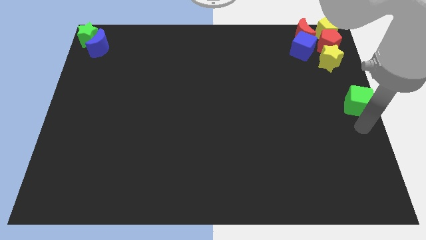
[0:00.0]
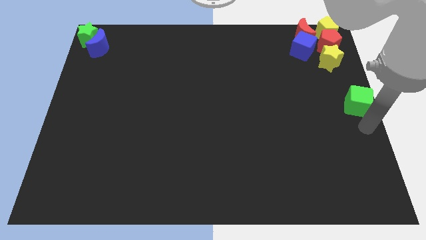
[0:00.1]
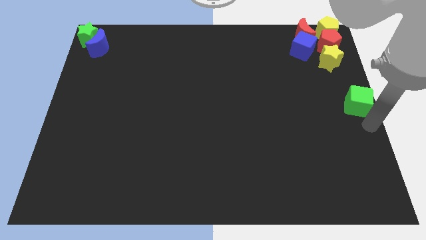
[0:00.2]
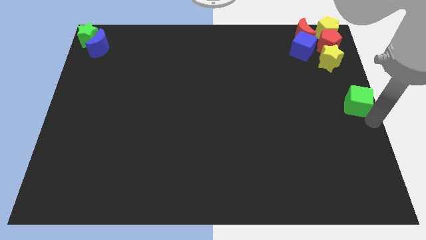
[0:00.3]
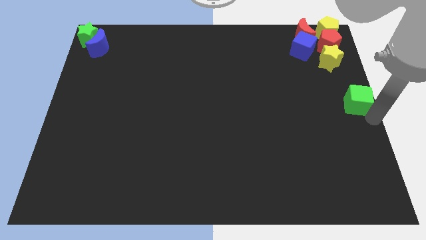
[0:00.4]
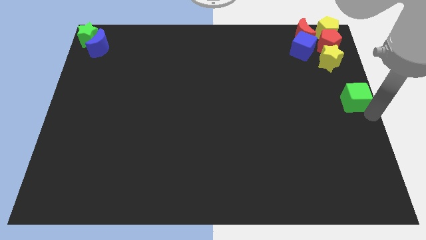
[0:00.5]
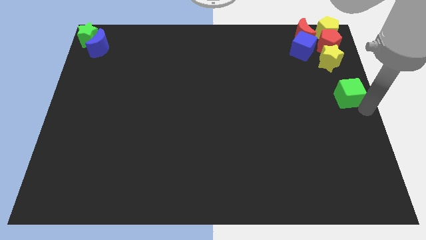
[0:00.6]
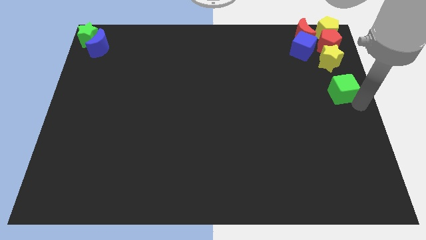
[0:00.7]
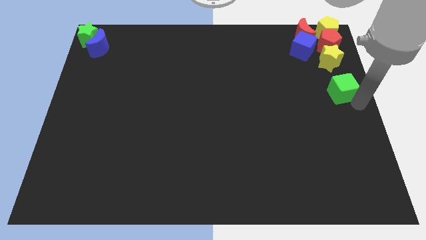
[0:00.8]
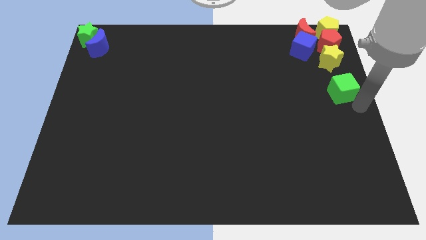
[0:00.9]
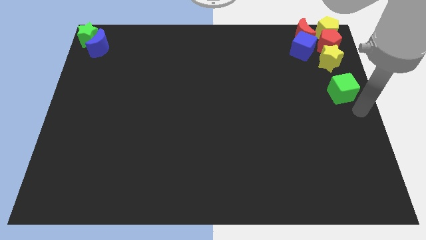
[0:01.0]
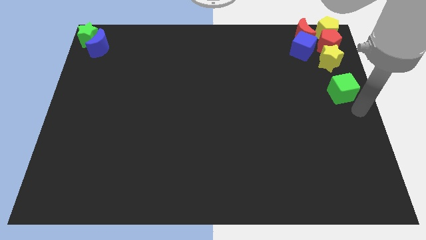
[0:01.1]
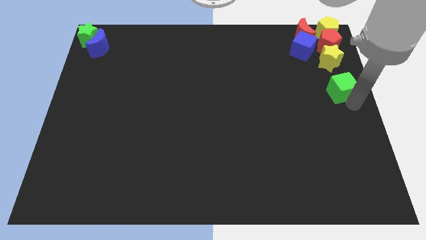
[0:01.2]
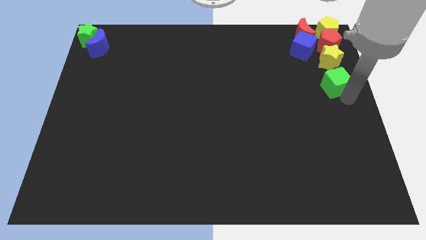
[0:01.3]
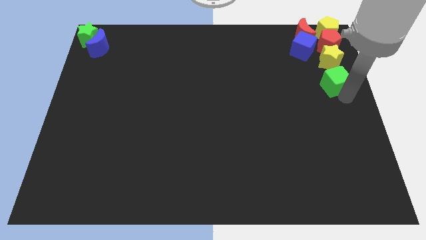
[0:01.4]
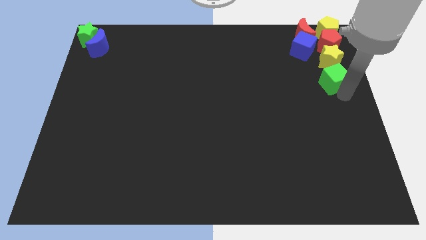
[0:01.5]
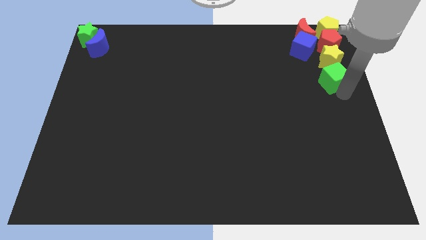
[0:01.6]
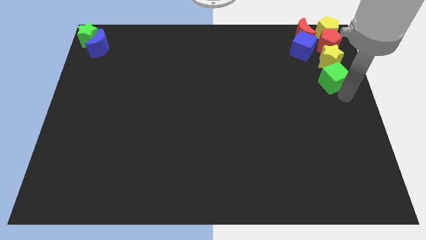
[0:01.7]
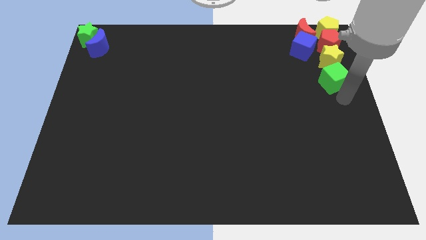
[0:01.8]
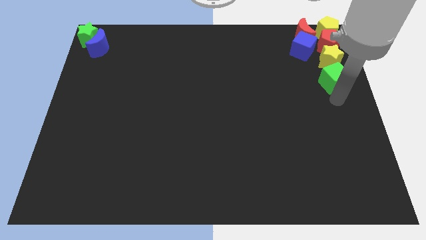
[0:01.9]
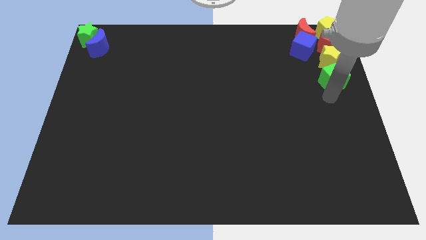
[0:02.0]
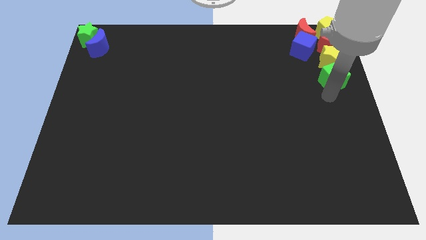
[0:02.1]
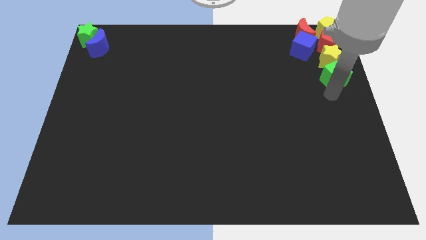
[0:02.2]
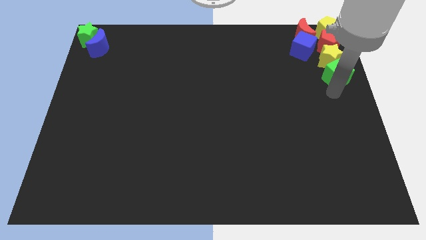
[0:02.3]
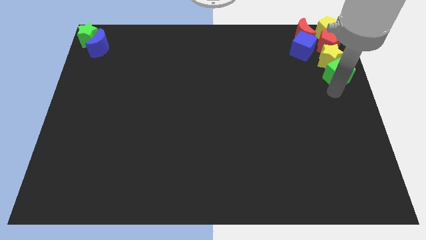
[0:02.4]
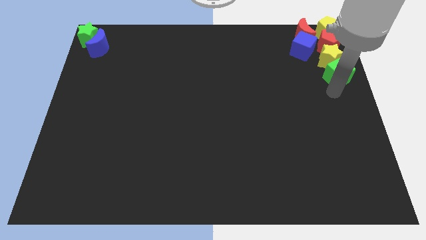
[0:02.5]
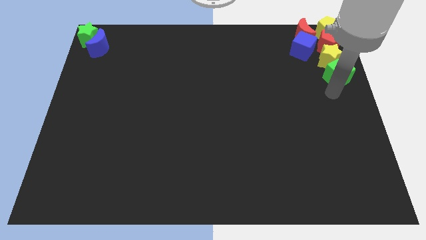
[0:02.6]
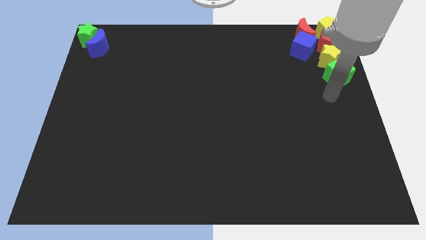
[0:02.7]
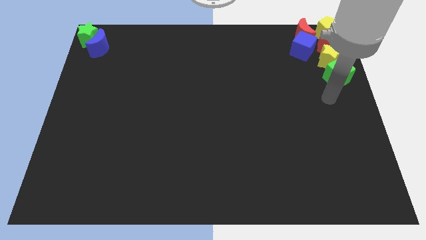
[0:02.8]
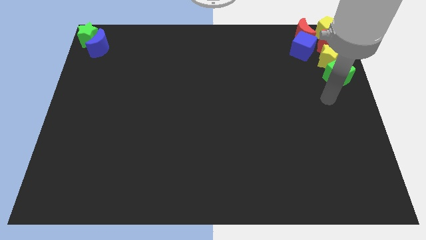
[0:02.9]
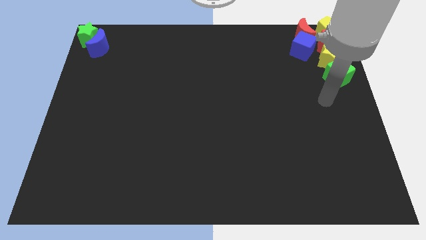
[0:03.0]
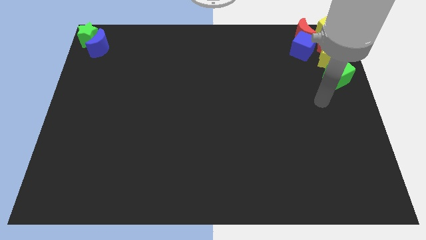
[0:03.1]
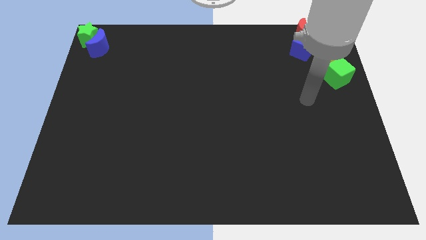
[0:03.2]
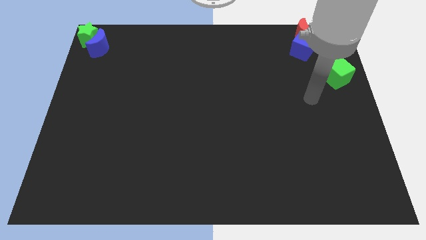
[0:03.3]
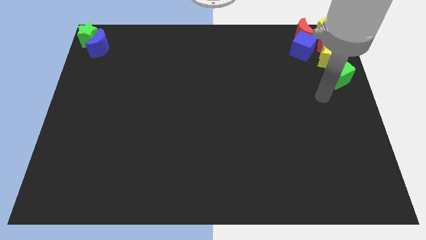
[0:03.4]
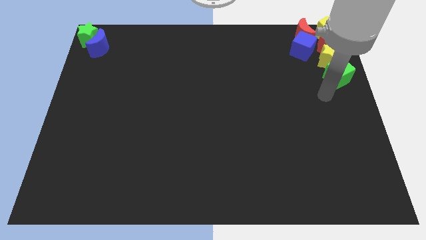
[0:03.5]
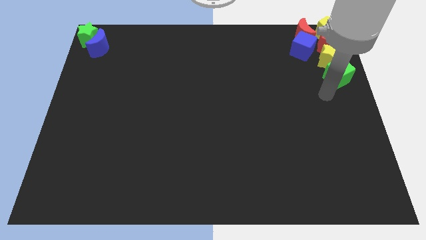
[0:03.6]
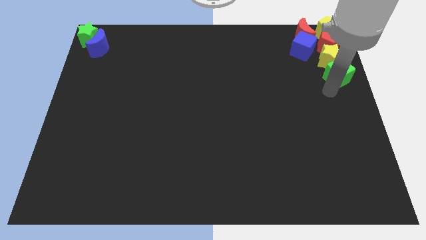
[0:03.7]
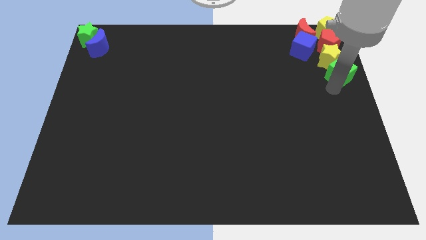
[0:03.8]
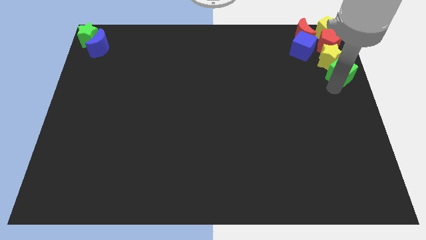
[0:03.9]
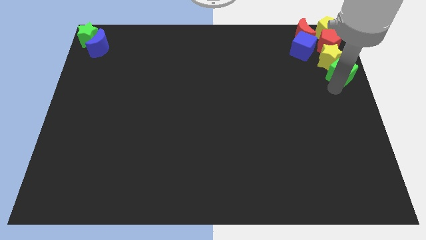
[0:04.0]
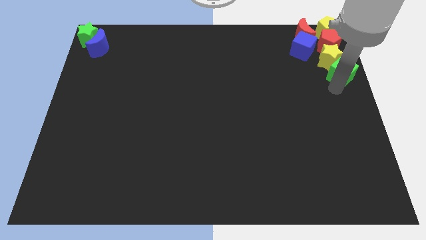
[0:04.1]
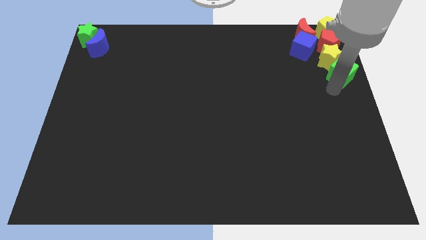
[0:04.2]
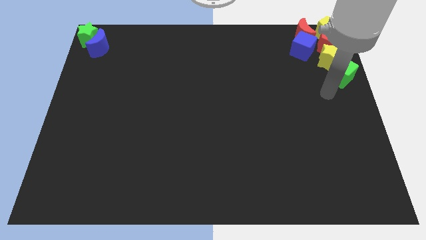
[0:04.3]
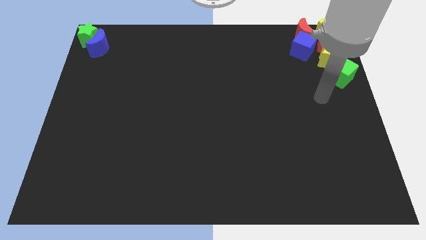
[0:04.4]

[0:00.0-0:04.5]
push the green cube into the bottom of the yellow star

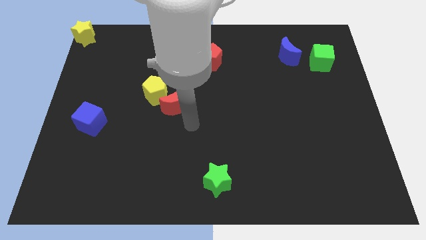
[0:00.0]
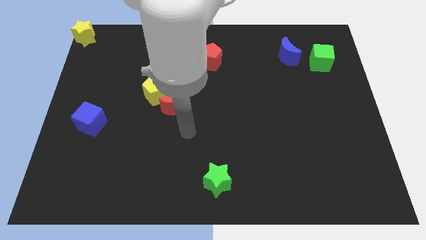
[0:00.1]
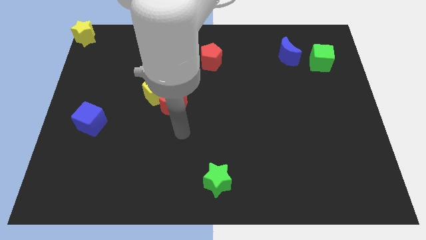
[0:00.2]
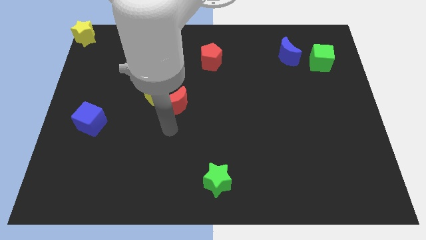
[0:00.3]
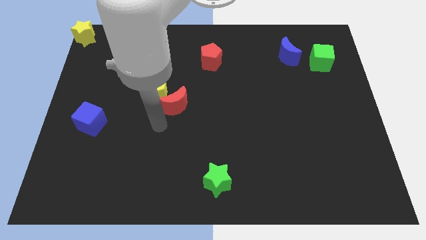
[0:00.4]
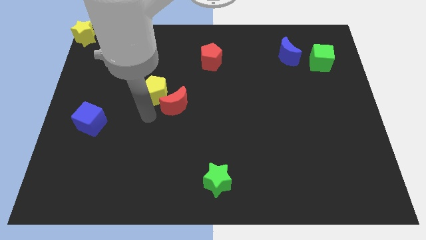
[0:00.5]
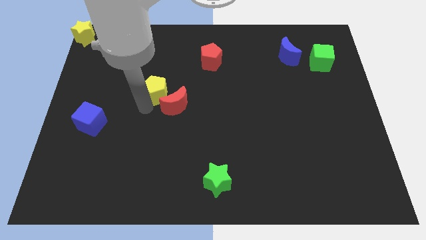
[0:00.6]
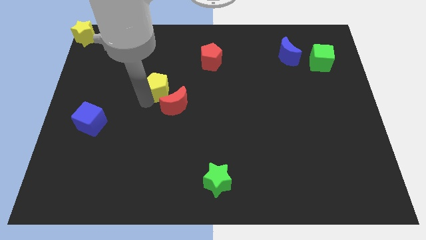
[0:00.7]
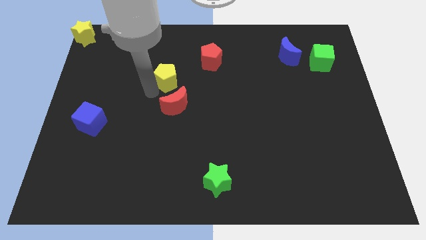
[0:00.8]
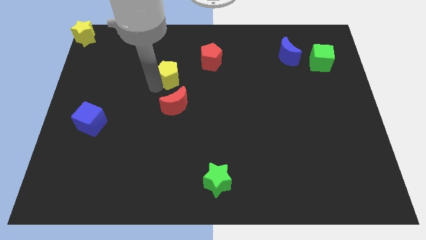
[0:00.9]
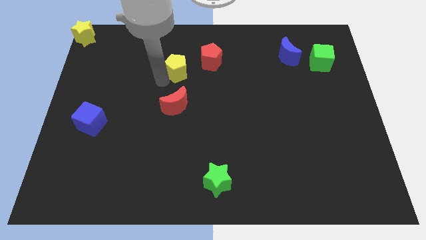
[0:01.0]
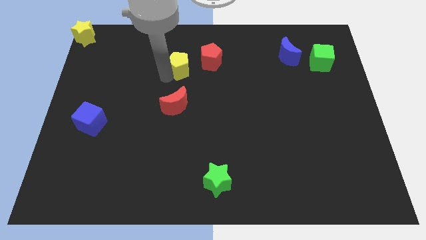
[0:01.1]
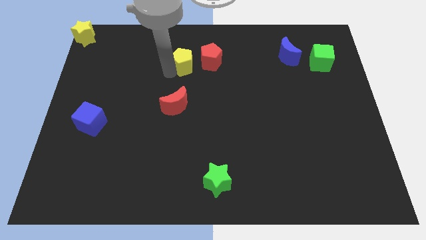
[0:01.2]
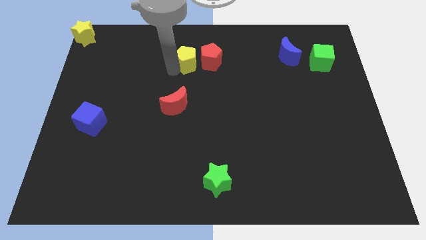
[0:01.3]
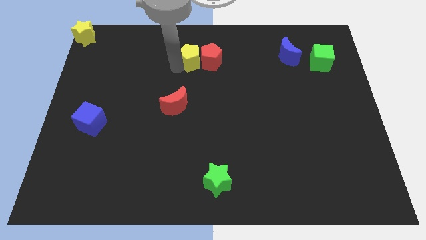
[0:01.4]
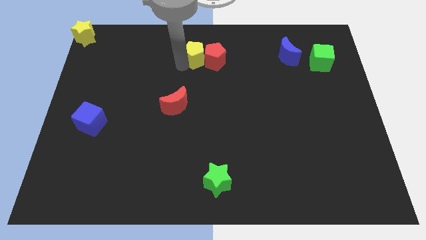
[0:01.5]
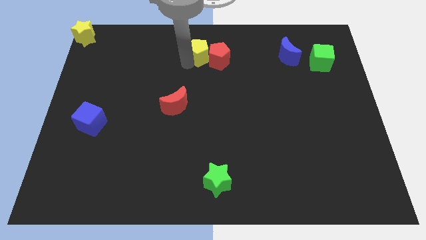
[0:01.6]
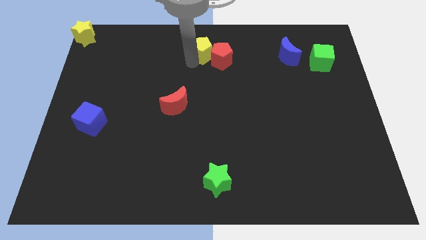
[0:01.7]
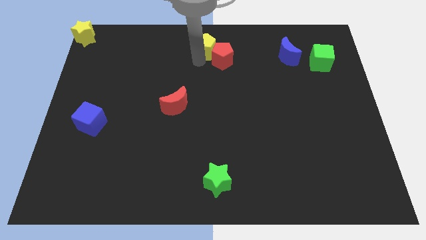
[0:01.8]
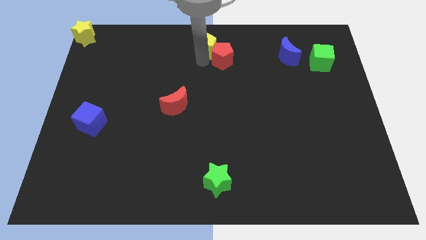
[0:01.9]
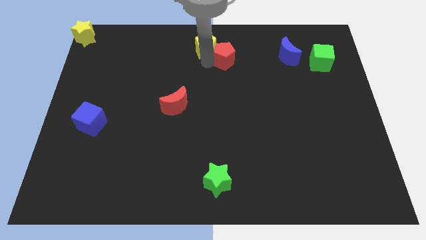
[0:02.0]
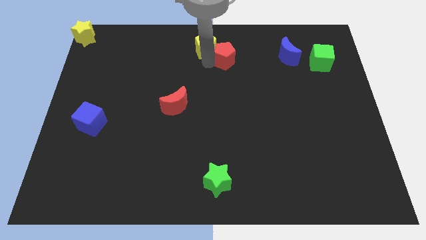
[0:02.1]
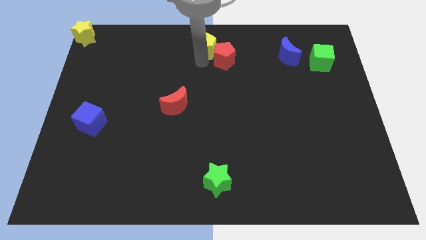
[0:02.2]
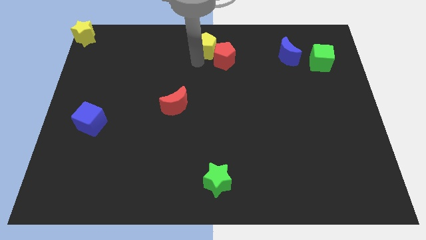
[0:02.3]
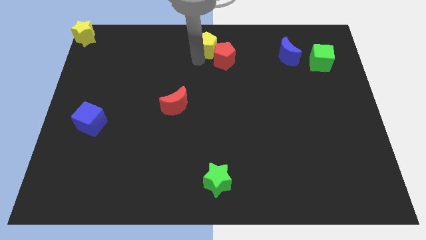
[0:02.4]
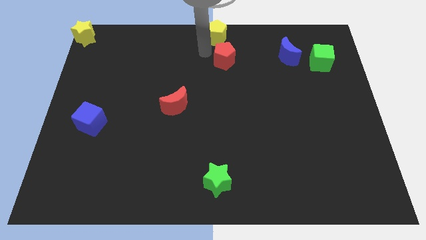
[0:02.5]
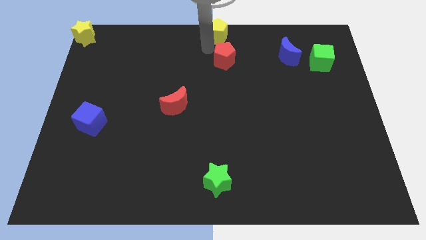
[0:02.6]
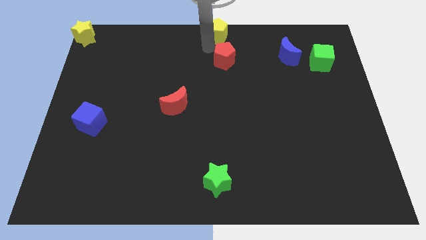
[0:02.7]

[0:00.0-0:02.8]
move the yellow pentagon to the top center of the board

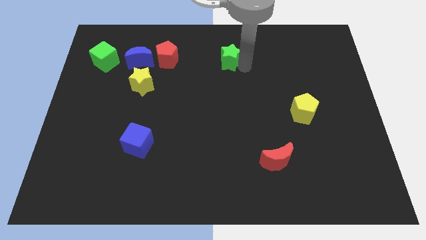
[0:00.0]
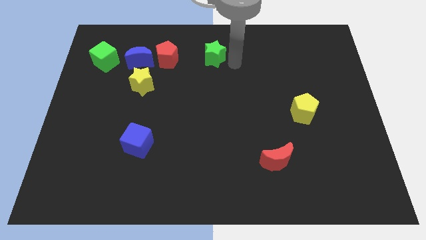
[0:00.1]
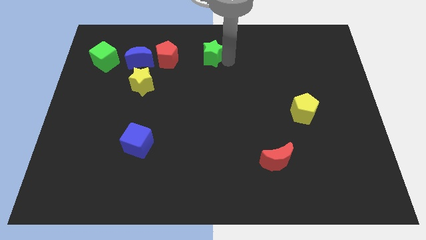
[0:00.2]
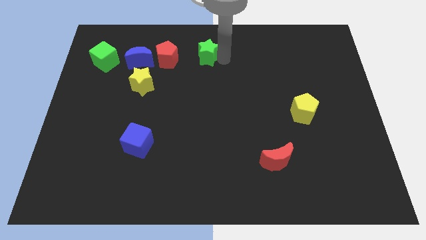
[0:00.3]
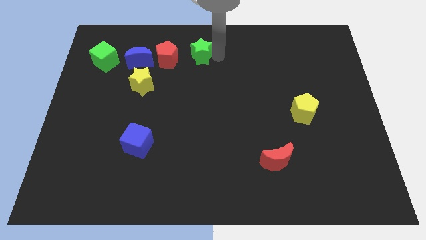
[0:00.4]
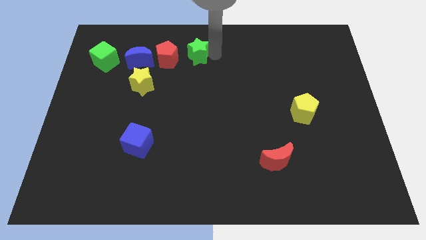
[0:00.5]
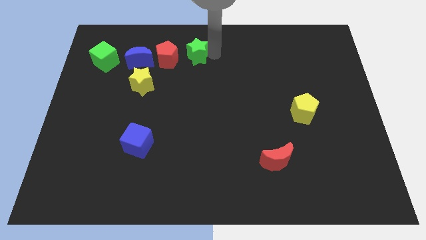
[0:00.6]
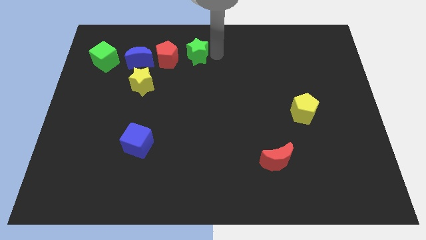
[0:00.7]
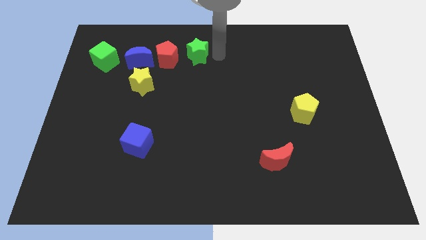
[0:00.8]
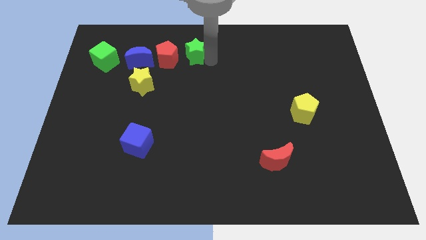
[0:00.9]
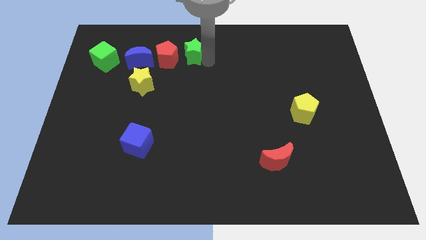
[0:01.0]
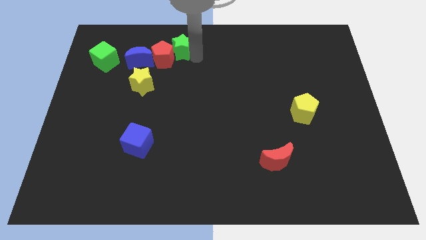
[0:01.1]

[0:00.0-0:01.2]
push the green star into the red pentagon

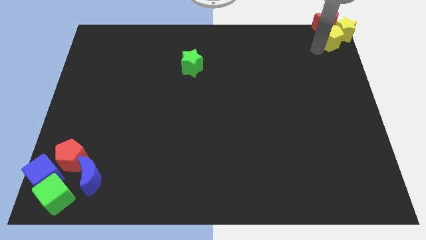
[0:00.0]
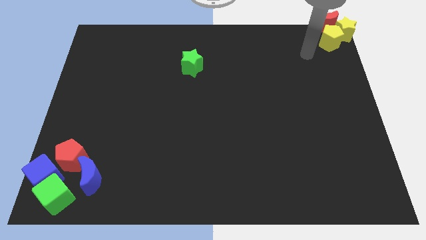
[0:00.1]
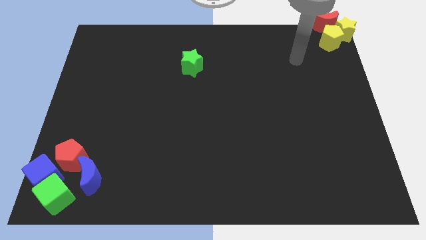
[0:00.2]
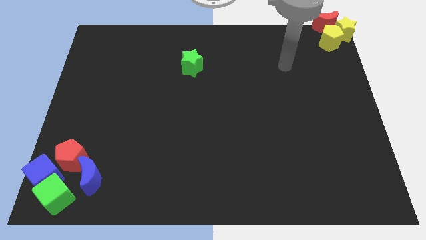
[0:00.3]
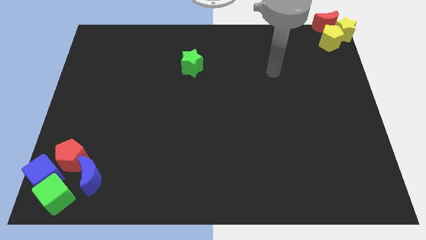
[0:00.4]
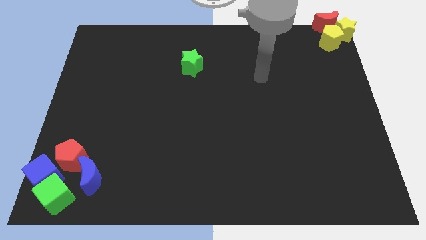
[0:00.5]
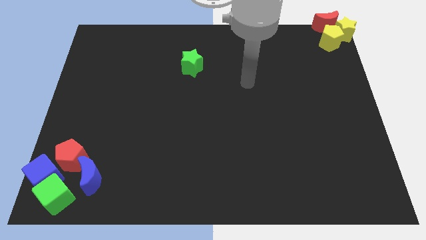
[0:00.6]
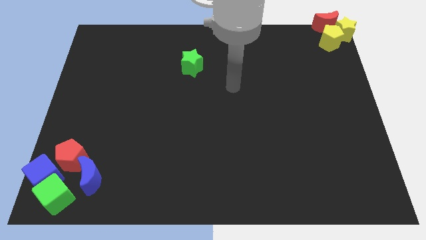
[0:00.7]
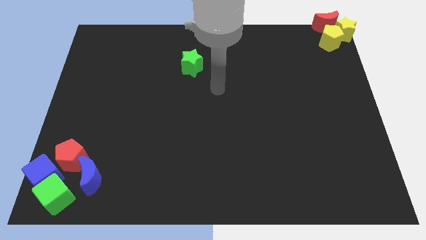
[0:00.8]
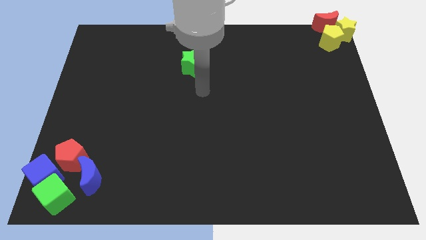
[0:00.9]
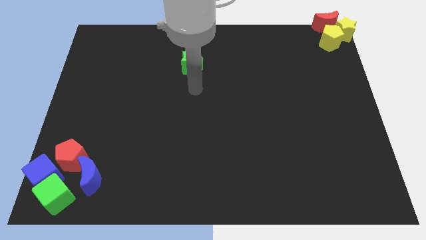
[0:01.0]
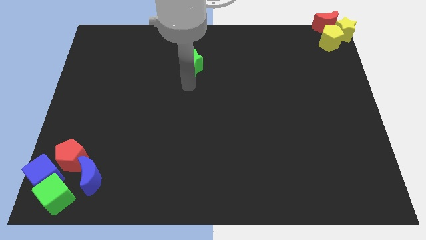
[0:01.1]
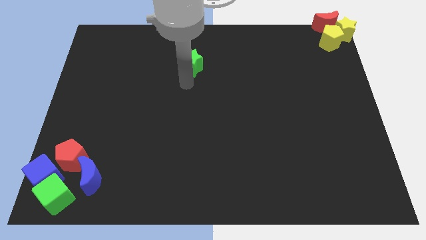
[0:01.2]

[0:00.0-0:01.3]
point your arm at the bottom of the green star
